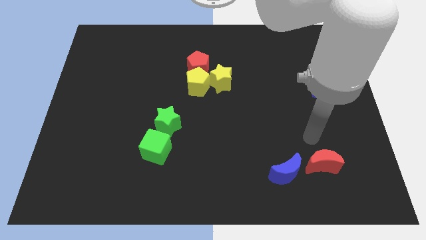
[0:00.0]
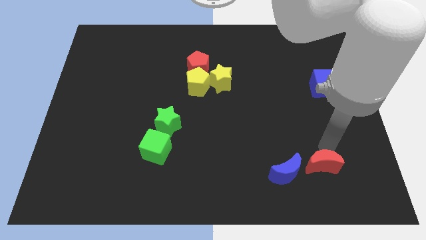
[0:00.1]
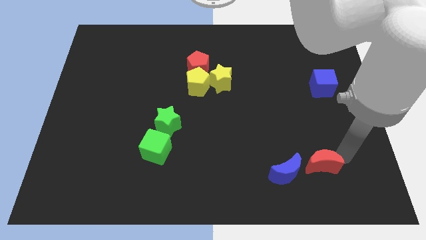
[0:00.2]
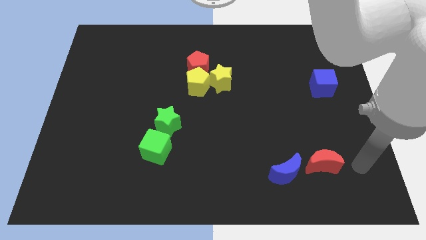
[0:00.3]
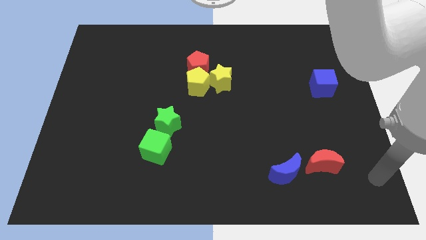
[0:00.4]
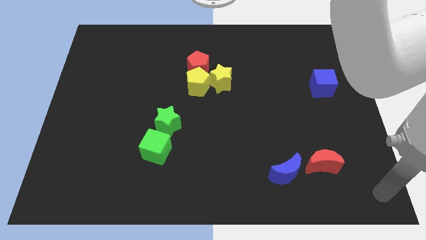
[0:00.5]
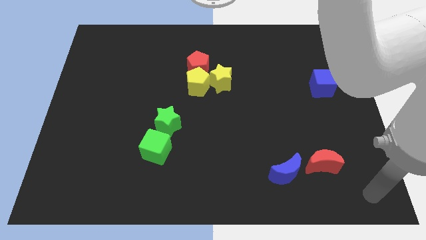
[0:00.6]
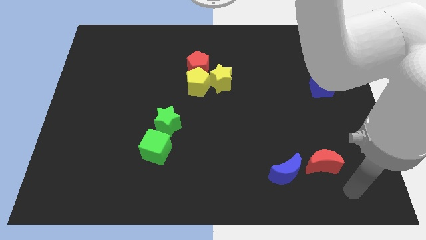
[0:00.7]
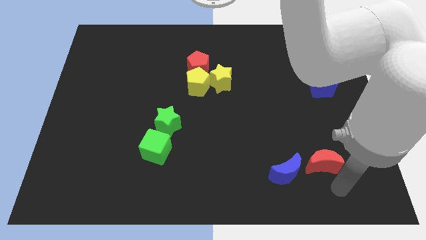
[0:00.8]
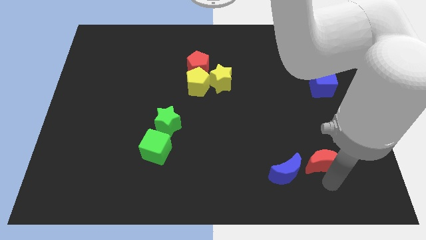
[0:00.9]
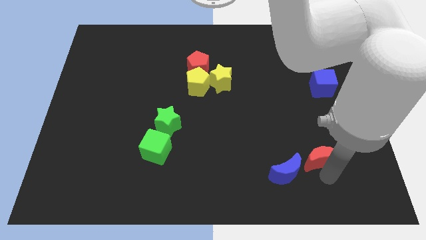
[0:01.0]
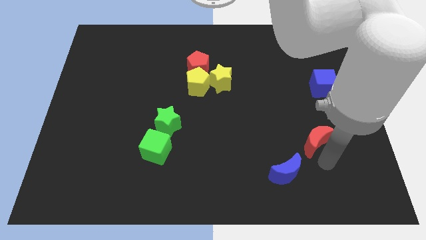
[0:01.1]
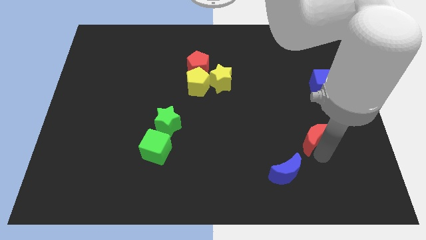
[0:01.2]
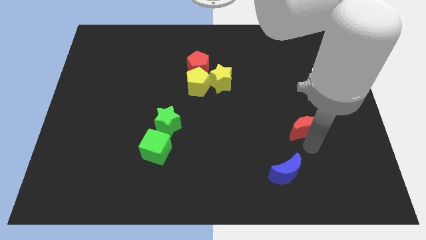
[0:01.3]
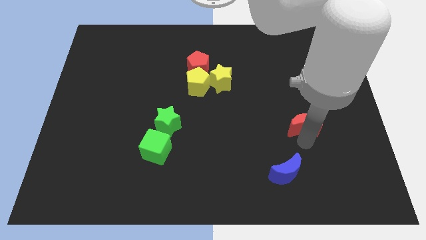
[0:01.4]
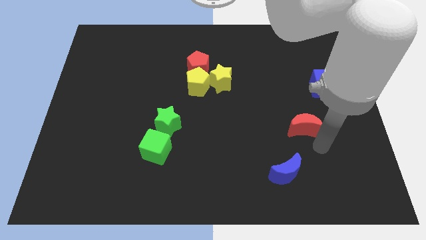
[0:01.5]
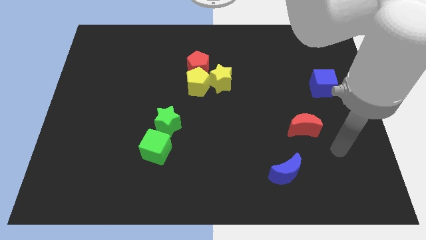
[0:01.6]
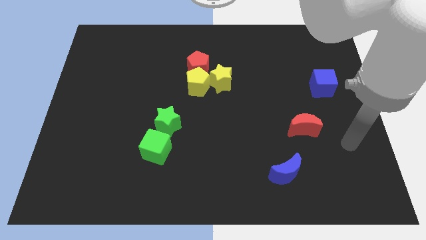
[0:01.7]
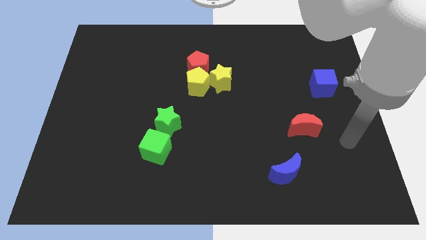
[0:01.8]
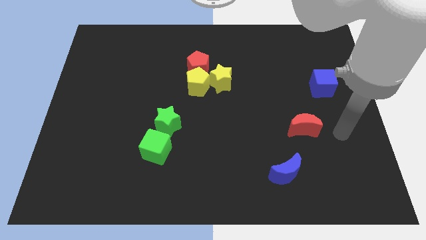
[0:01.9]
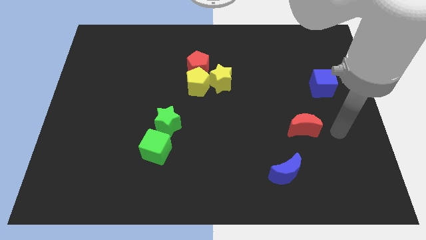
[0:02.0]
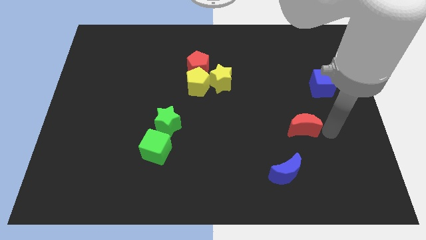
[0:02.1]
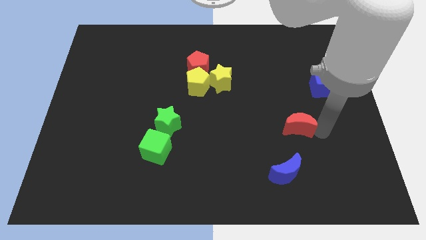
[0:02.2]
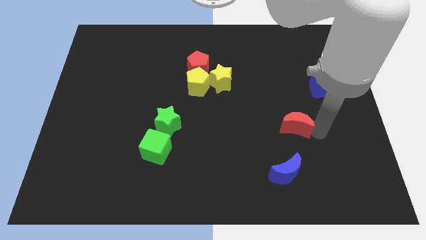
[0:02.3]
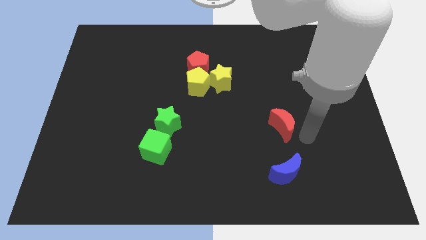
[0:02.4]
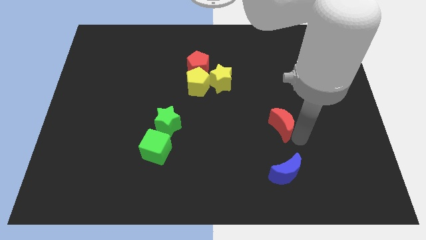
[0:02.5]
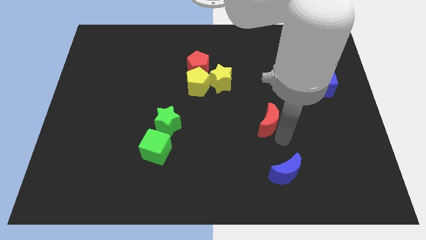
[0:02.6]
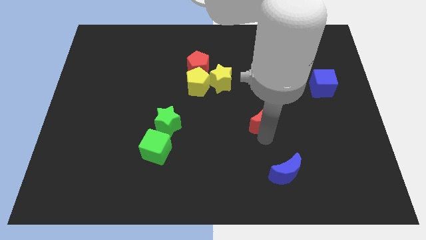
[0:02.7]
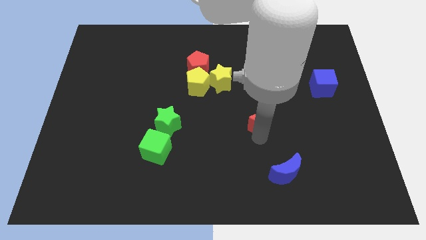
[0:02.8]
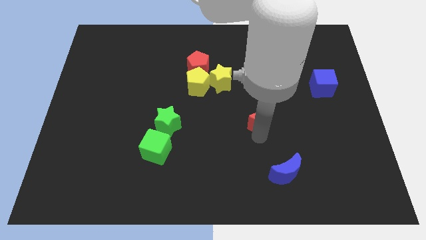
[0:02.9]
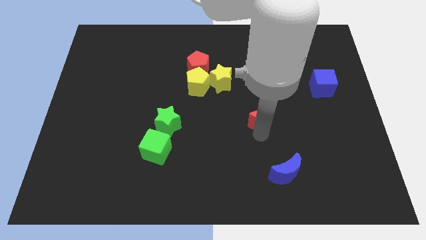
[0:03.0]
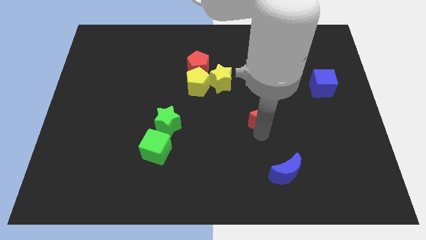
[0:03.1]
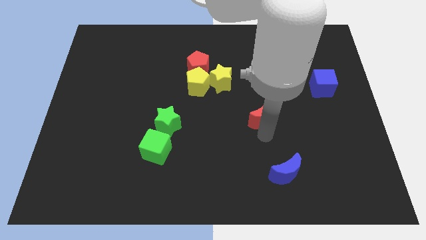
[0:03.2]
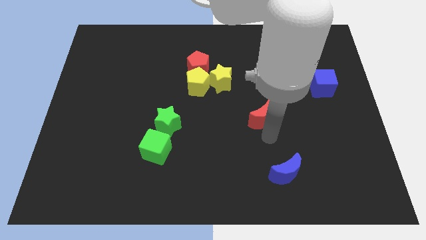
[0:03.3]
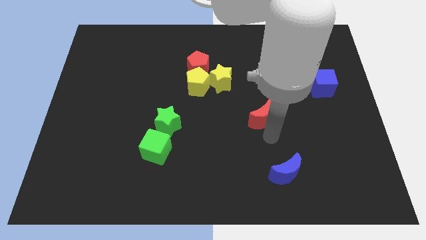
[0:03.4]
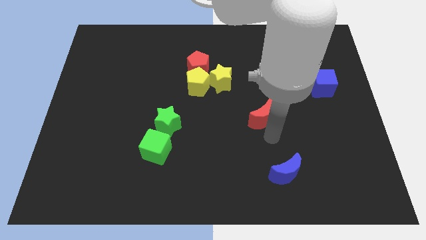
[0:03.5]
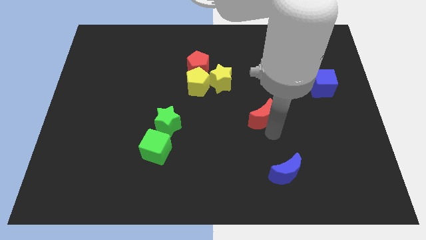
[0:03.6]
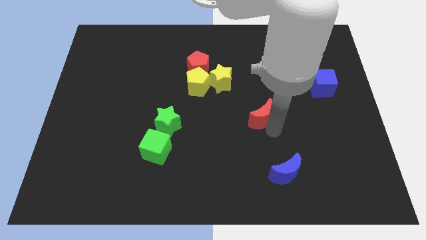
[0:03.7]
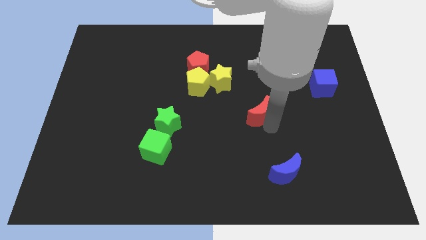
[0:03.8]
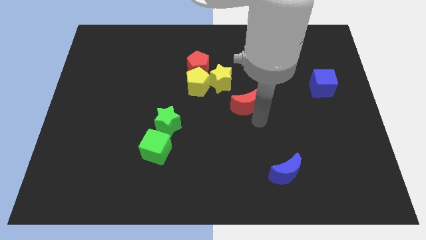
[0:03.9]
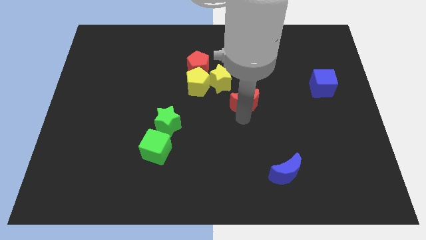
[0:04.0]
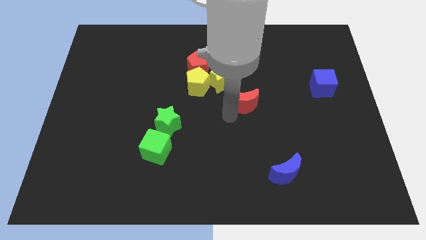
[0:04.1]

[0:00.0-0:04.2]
push the red crescent diagonally in between the yellow star and blue moon

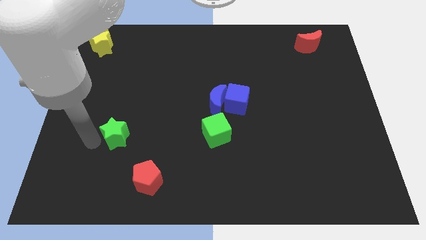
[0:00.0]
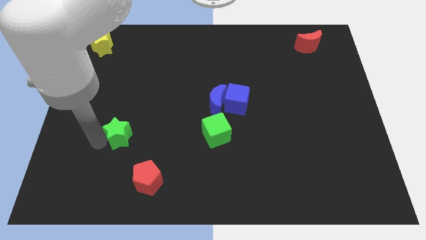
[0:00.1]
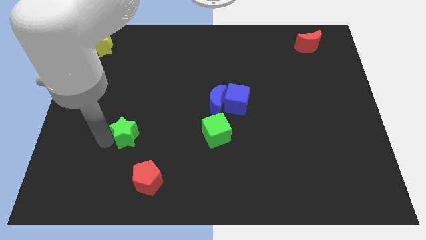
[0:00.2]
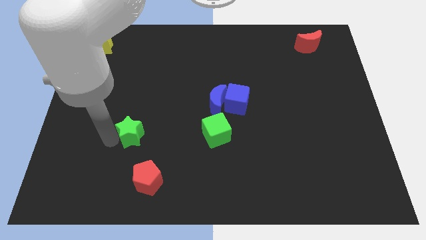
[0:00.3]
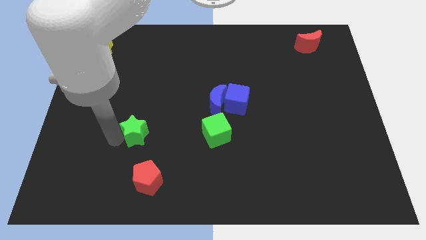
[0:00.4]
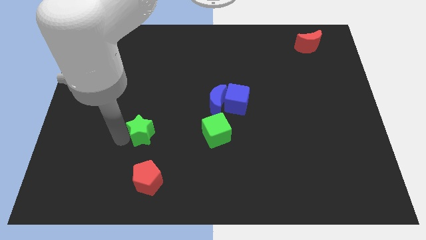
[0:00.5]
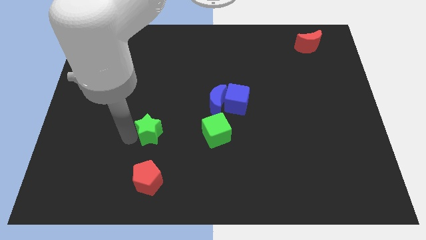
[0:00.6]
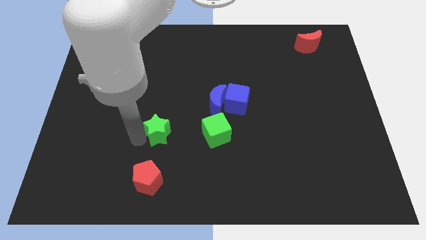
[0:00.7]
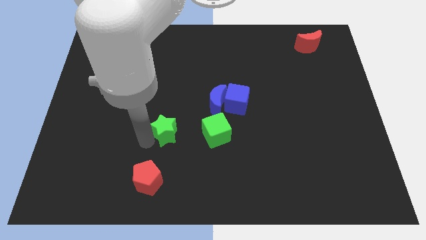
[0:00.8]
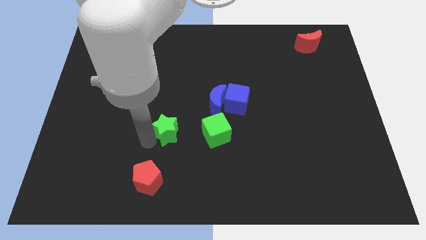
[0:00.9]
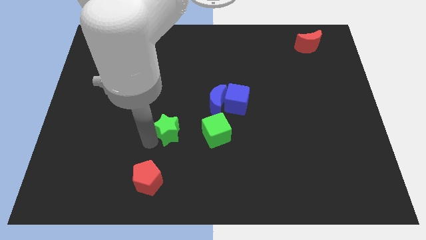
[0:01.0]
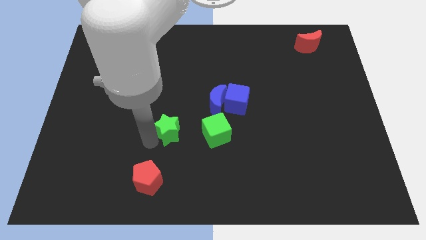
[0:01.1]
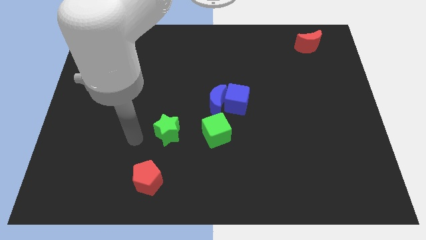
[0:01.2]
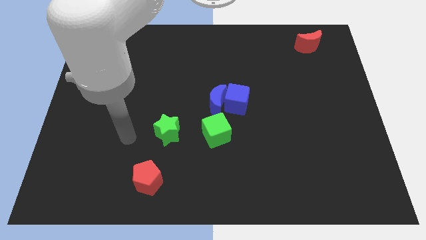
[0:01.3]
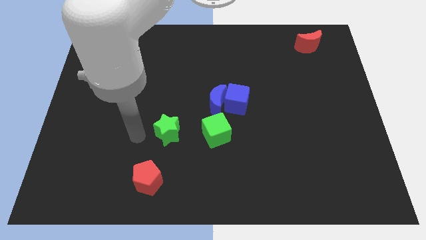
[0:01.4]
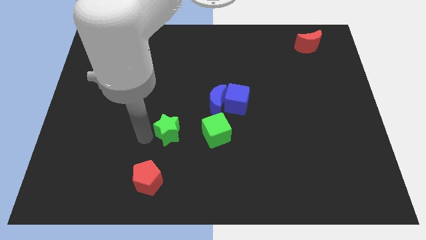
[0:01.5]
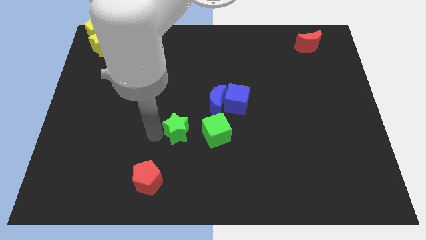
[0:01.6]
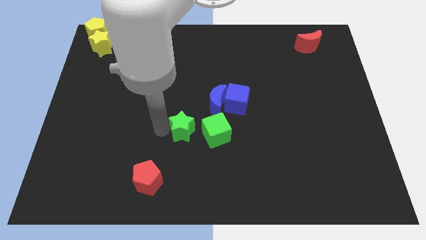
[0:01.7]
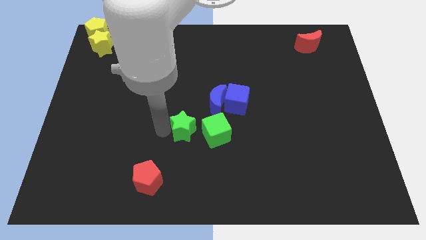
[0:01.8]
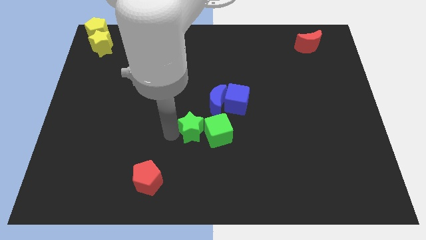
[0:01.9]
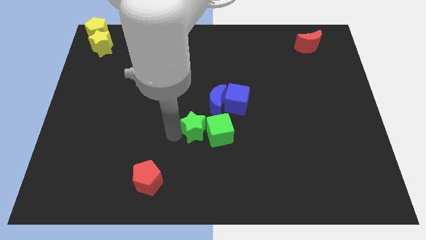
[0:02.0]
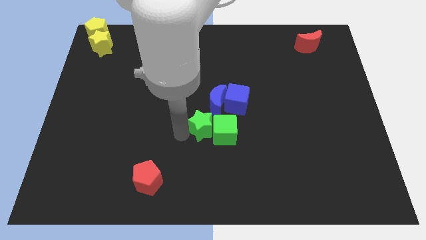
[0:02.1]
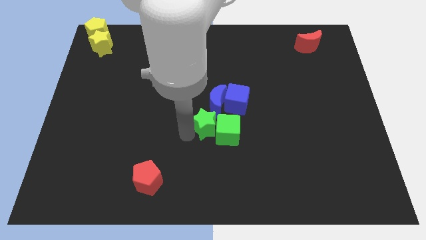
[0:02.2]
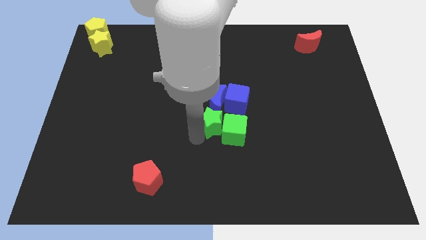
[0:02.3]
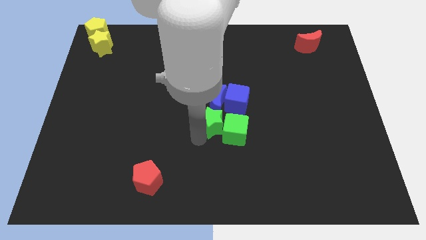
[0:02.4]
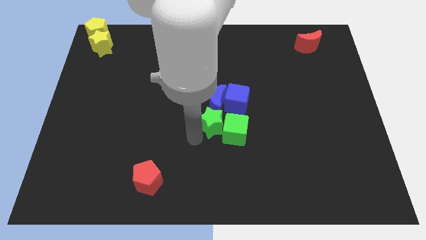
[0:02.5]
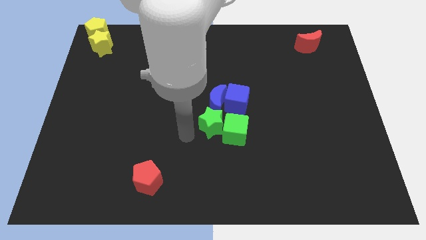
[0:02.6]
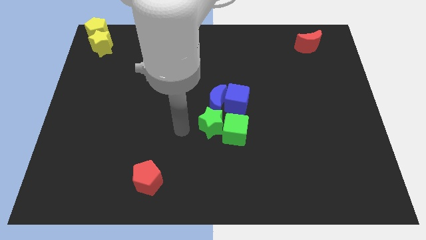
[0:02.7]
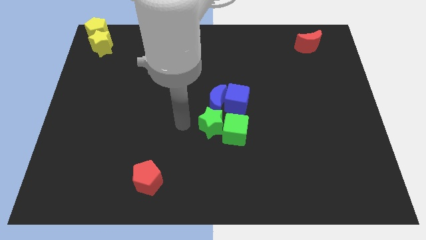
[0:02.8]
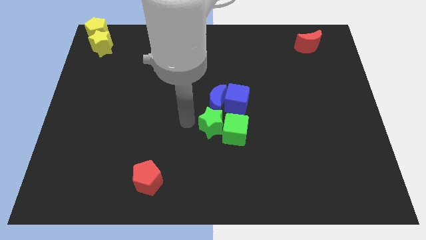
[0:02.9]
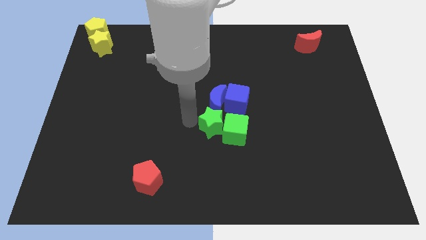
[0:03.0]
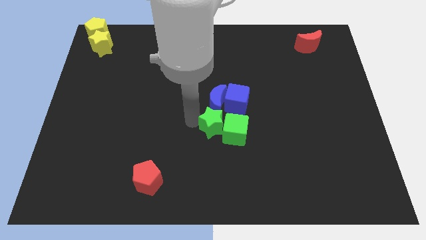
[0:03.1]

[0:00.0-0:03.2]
move green blocks below the blue blocks

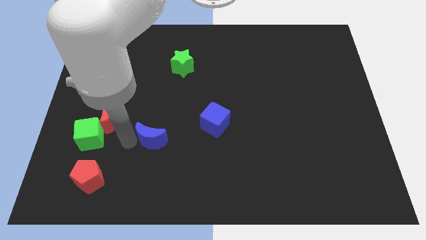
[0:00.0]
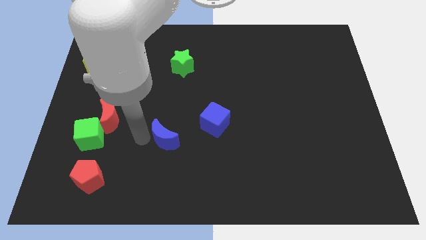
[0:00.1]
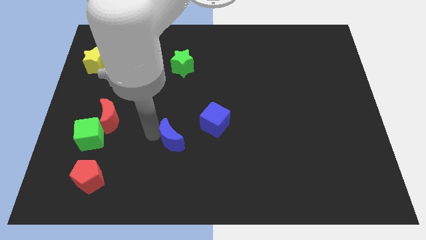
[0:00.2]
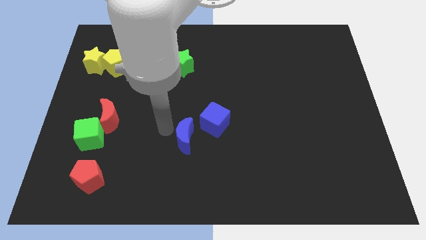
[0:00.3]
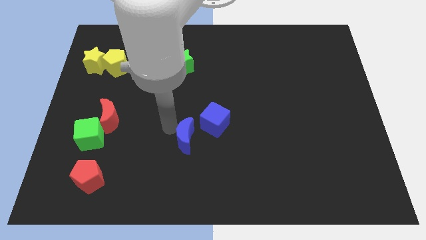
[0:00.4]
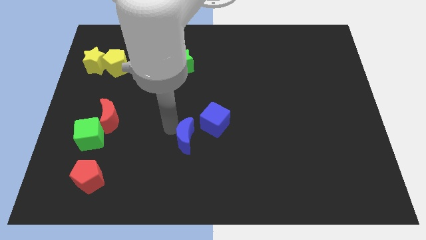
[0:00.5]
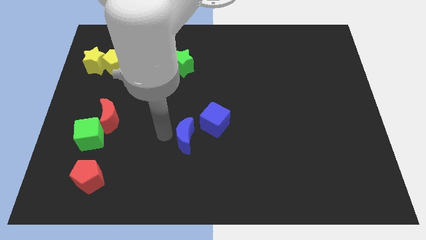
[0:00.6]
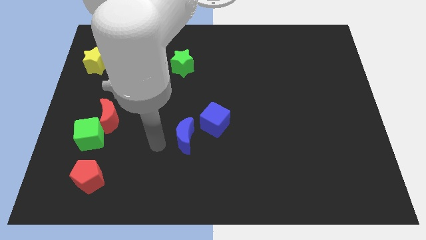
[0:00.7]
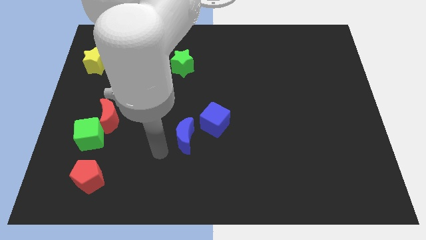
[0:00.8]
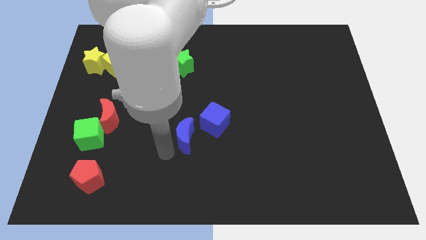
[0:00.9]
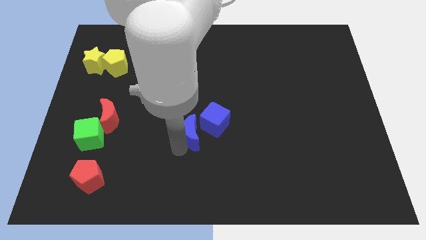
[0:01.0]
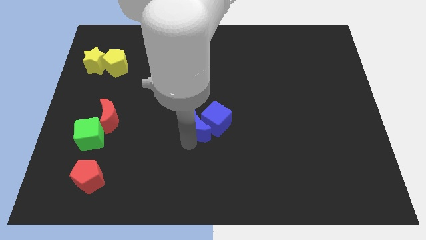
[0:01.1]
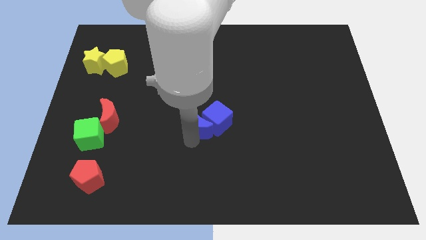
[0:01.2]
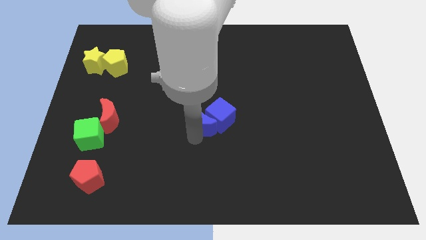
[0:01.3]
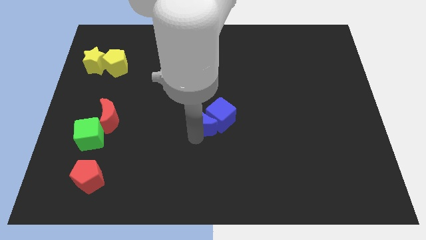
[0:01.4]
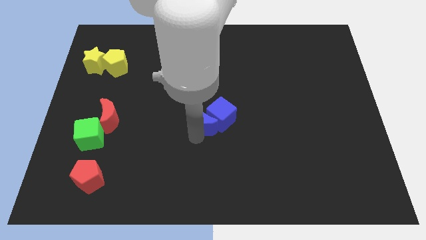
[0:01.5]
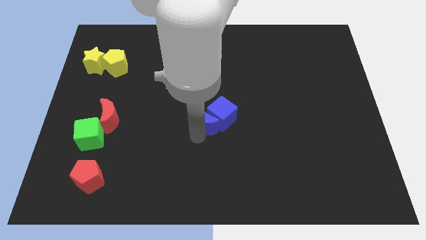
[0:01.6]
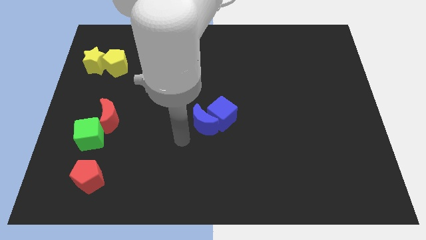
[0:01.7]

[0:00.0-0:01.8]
place the blue crescent into the blue cube
